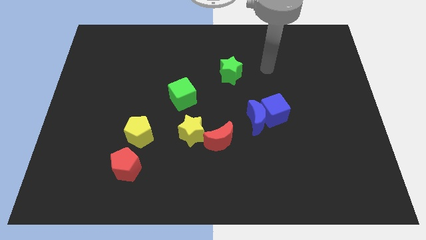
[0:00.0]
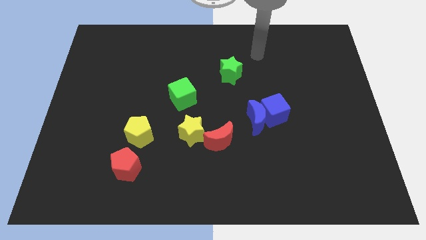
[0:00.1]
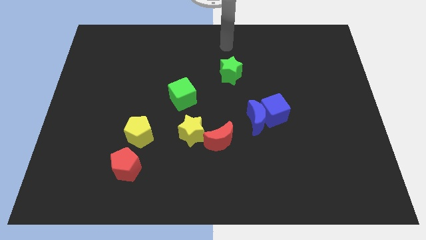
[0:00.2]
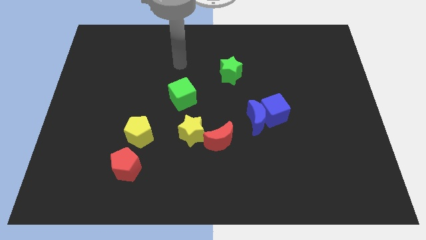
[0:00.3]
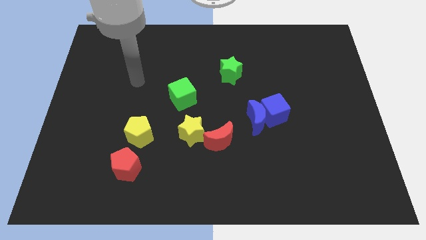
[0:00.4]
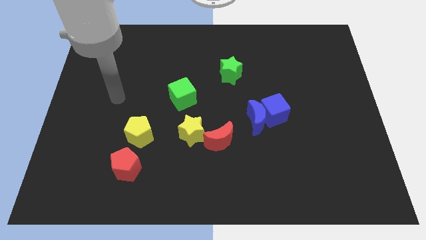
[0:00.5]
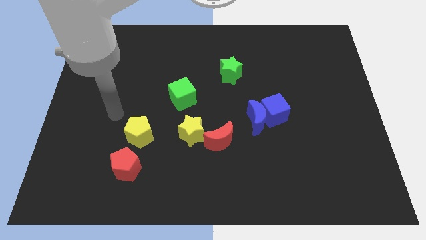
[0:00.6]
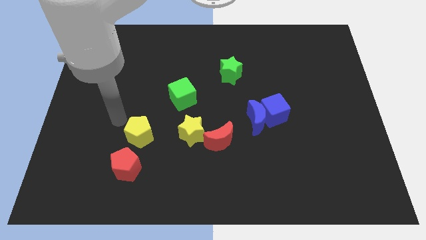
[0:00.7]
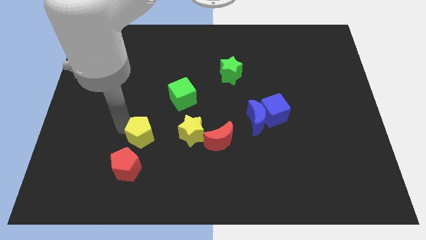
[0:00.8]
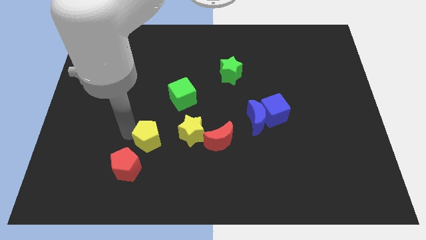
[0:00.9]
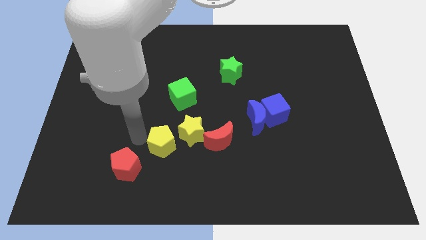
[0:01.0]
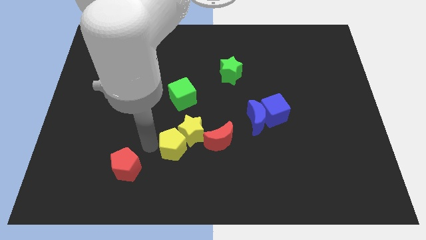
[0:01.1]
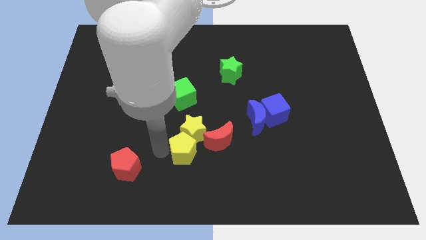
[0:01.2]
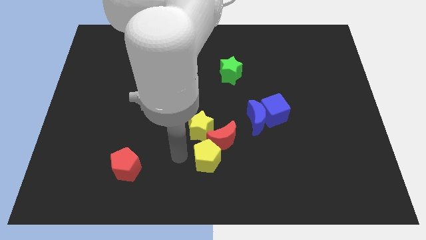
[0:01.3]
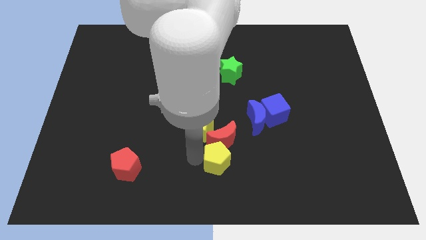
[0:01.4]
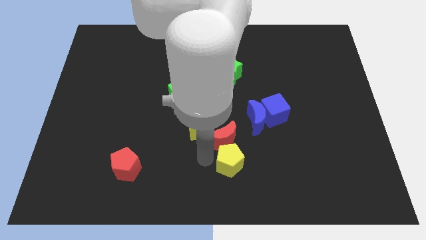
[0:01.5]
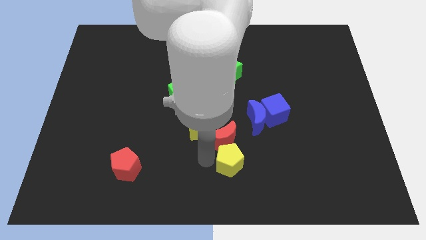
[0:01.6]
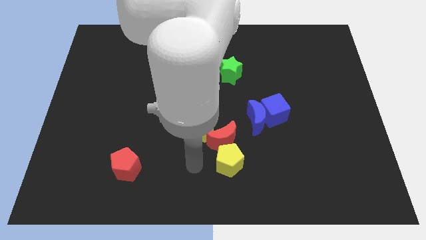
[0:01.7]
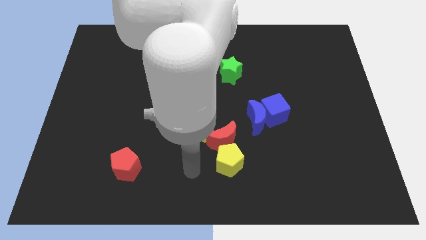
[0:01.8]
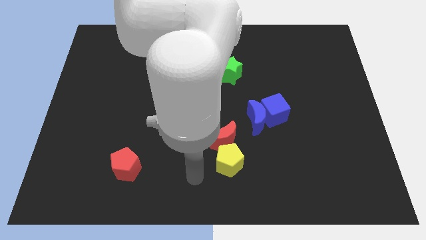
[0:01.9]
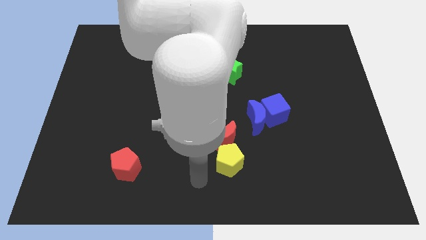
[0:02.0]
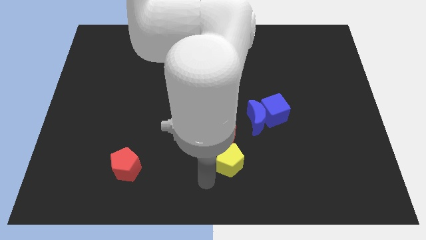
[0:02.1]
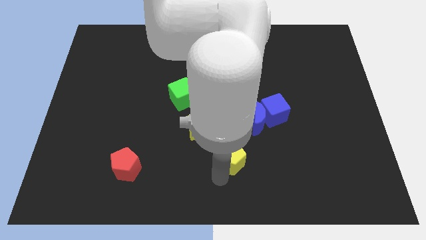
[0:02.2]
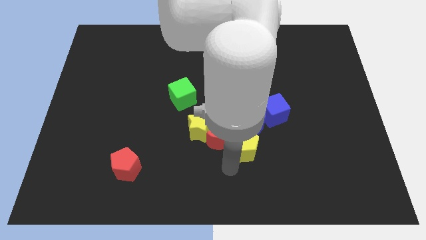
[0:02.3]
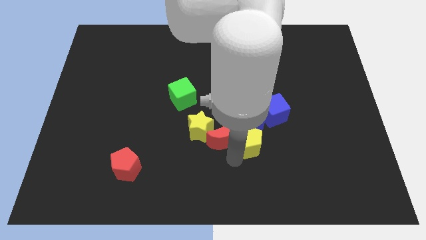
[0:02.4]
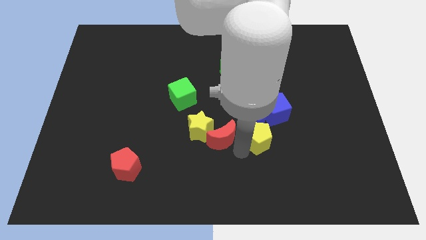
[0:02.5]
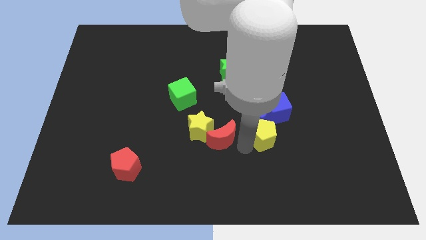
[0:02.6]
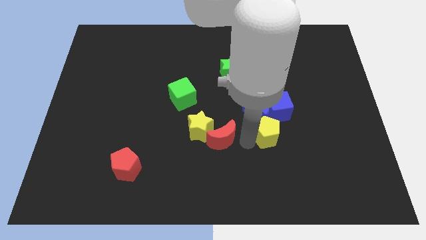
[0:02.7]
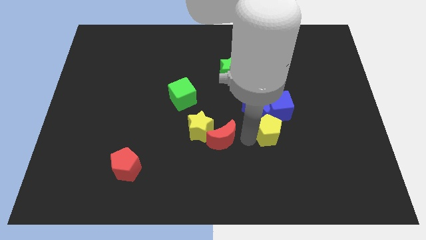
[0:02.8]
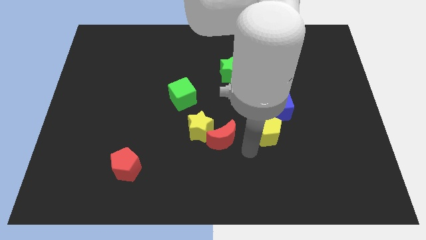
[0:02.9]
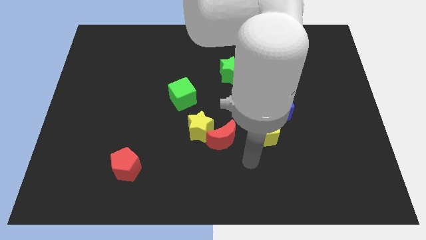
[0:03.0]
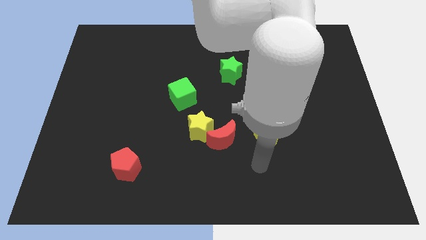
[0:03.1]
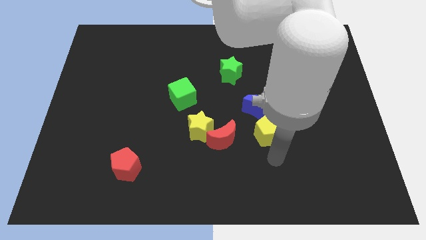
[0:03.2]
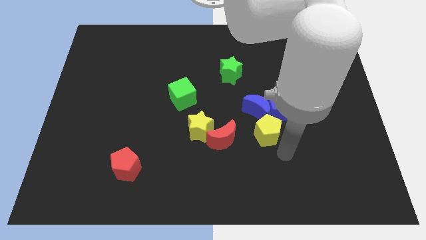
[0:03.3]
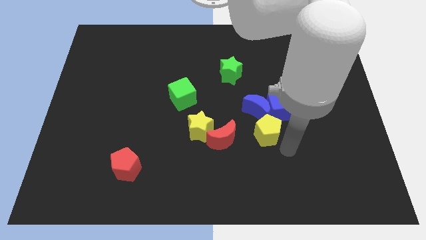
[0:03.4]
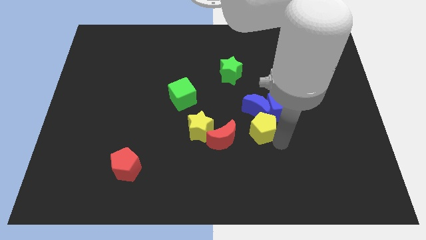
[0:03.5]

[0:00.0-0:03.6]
slide the yellow pentagon to the blue moon

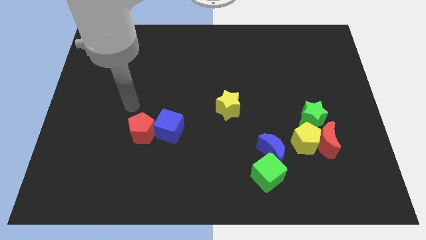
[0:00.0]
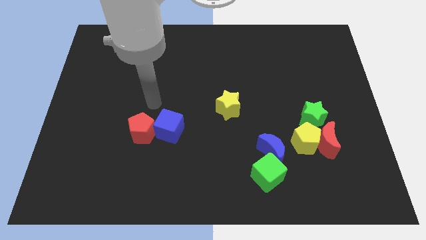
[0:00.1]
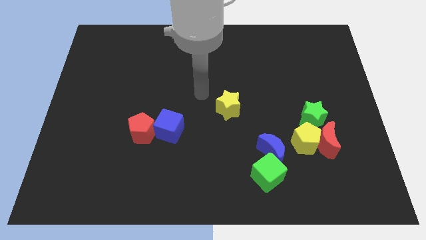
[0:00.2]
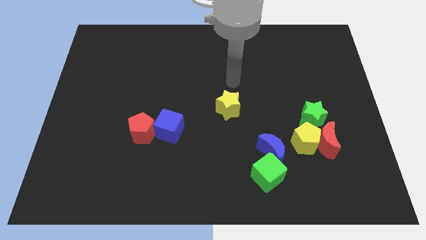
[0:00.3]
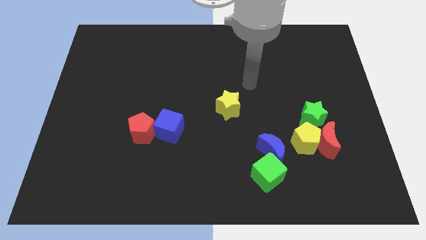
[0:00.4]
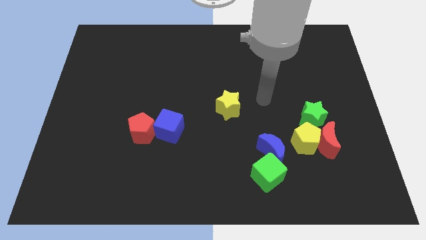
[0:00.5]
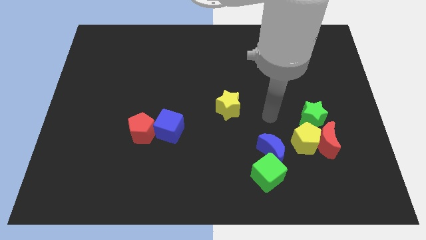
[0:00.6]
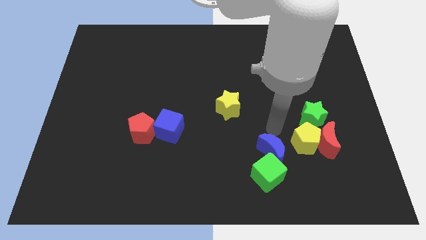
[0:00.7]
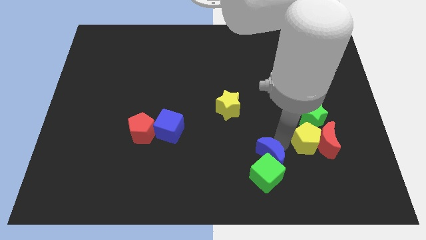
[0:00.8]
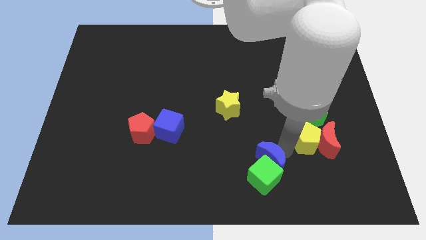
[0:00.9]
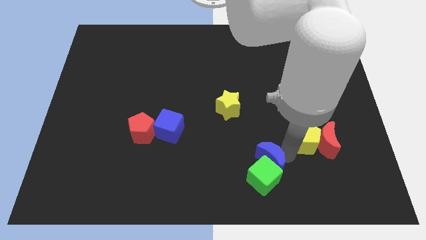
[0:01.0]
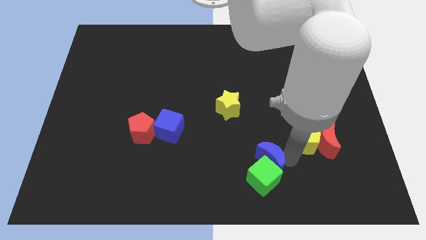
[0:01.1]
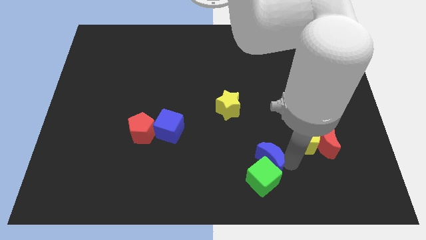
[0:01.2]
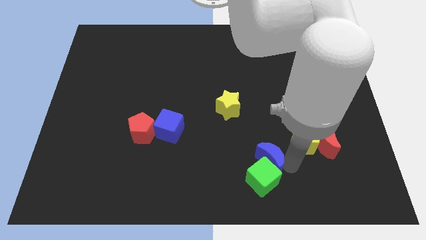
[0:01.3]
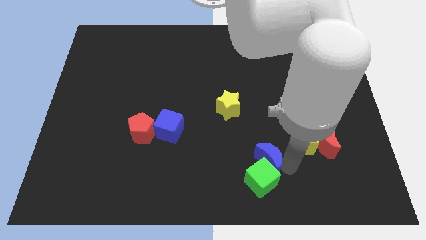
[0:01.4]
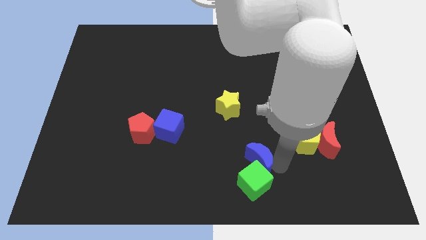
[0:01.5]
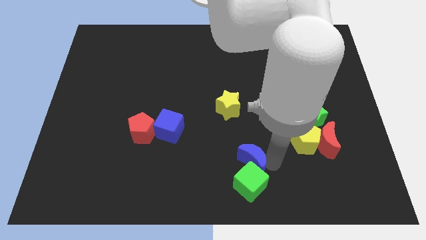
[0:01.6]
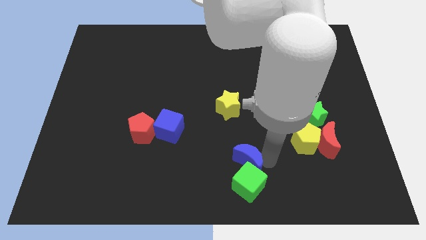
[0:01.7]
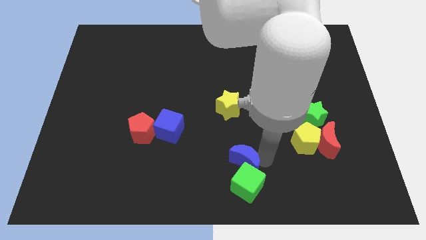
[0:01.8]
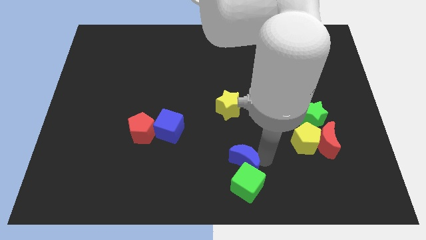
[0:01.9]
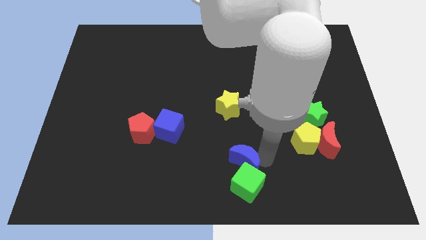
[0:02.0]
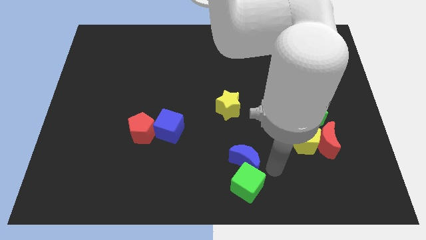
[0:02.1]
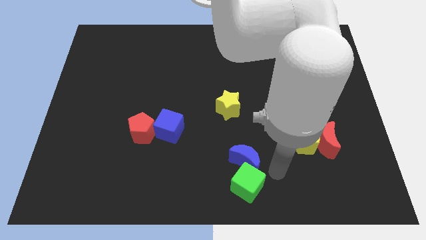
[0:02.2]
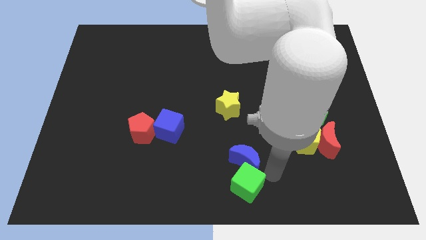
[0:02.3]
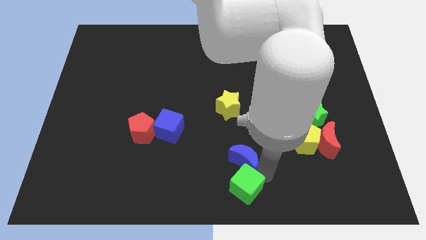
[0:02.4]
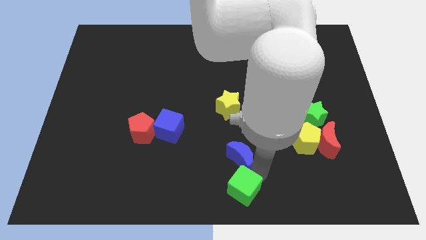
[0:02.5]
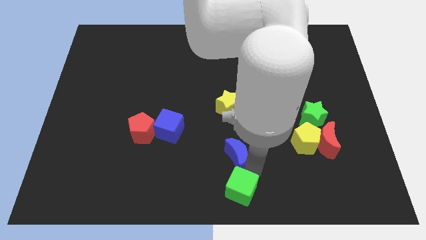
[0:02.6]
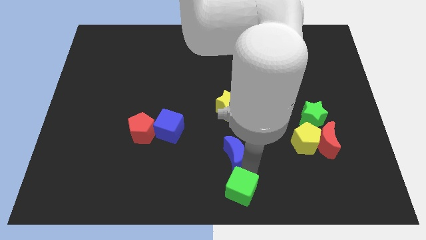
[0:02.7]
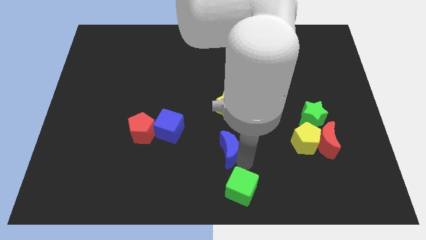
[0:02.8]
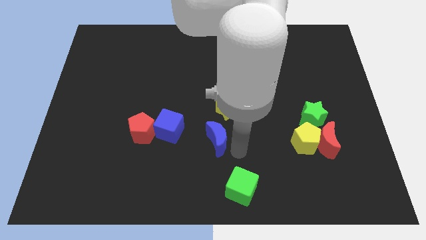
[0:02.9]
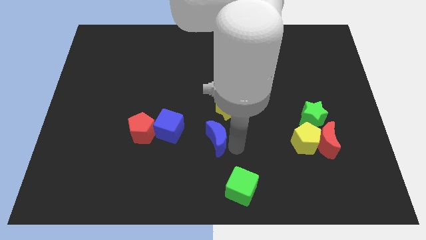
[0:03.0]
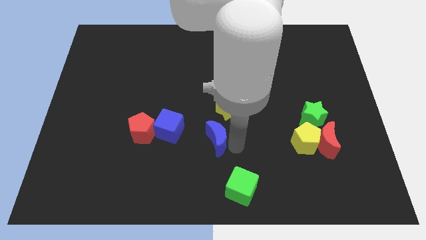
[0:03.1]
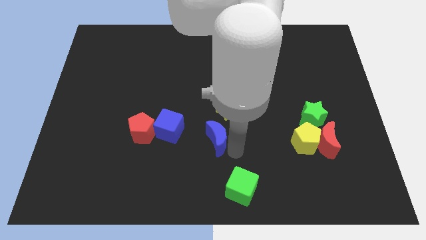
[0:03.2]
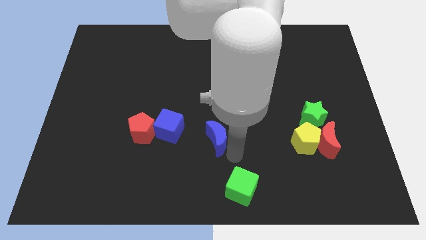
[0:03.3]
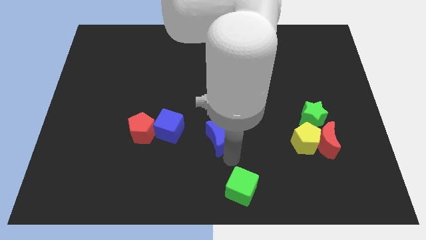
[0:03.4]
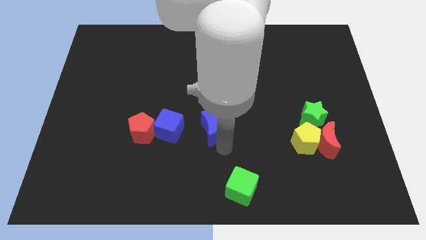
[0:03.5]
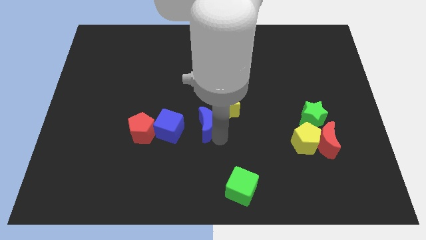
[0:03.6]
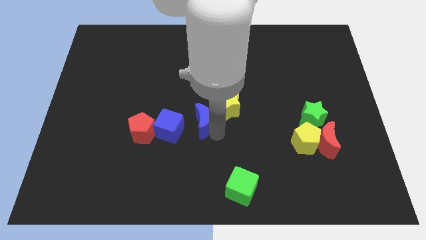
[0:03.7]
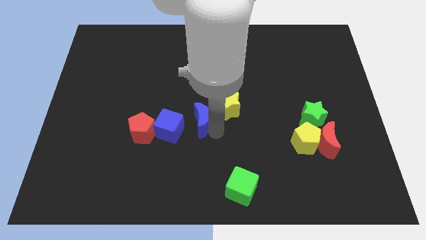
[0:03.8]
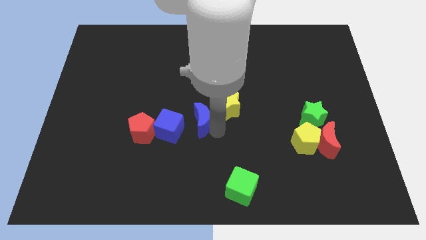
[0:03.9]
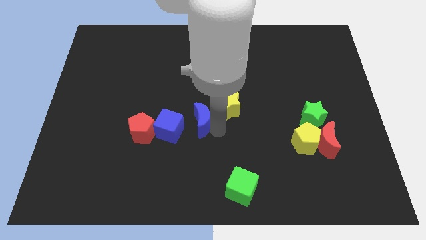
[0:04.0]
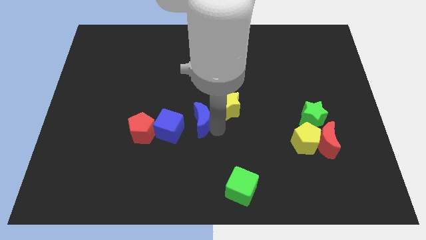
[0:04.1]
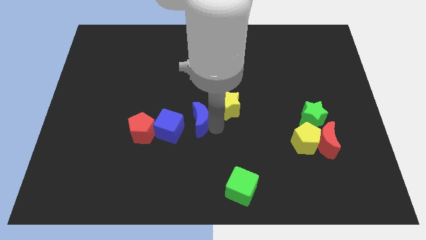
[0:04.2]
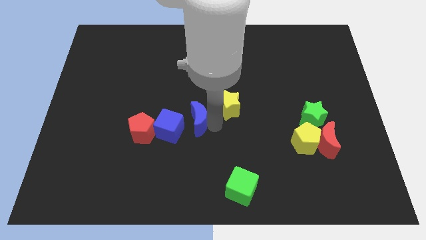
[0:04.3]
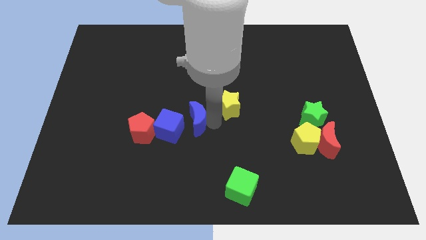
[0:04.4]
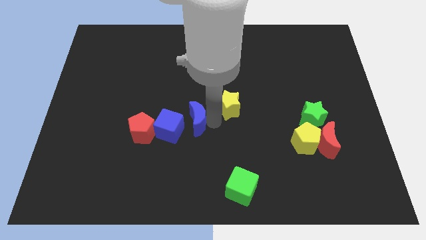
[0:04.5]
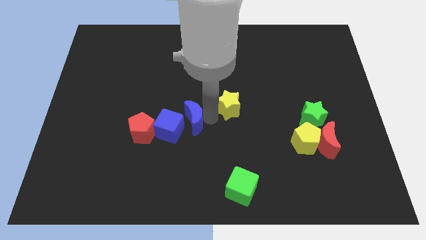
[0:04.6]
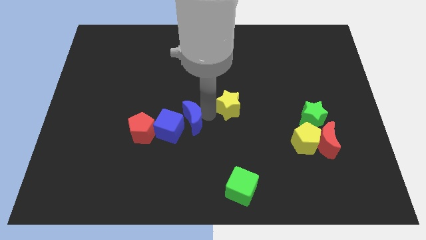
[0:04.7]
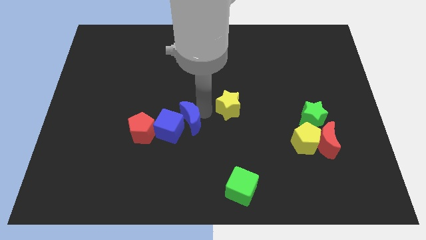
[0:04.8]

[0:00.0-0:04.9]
put the blue moon close to the blue cube
